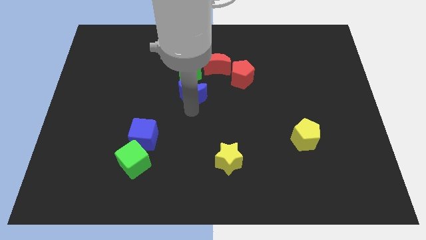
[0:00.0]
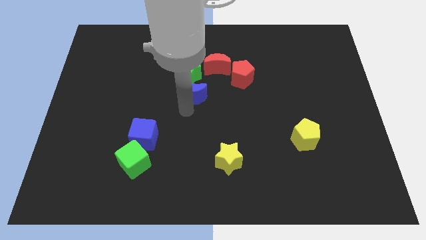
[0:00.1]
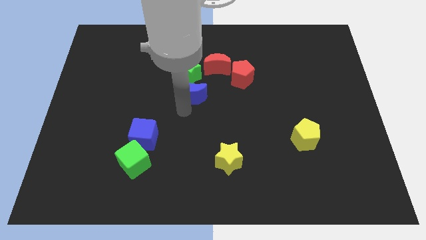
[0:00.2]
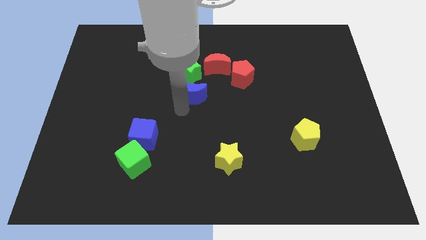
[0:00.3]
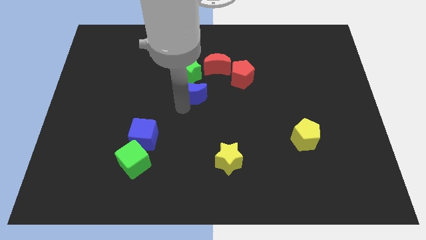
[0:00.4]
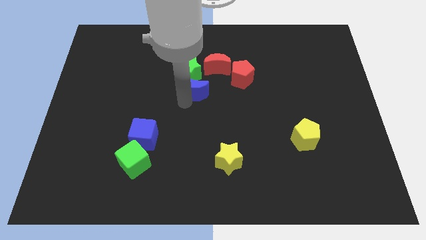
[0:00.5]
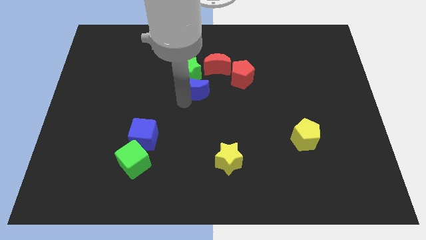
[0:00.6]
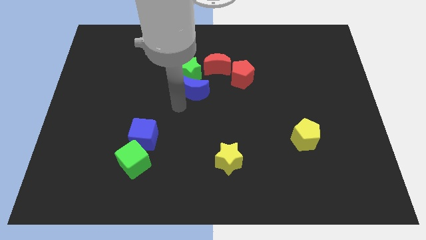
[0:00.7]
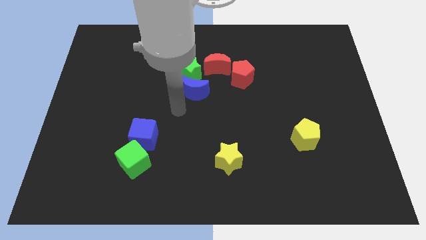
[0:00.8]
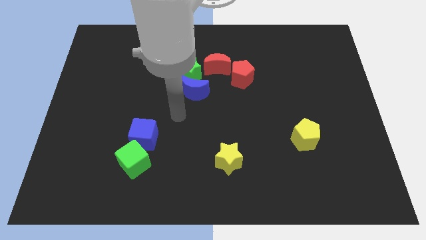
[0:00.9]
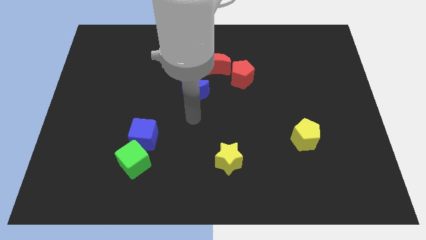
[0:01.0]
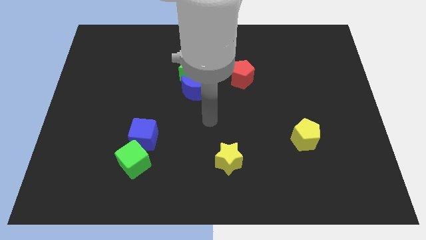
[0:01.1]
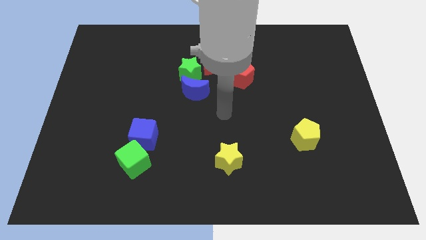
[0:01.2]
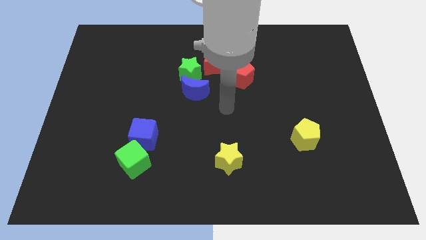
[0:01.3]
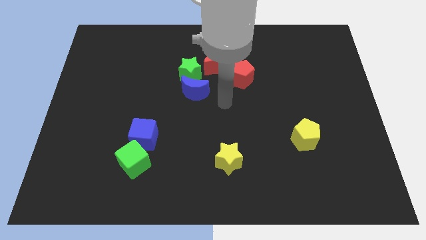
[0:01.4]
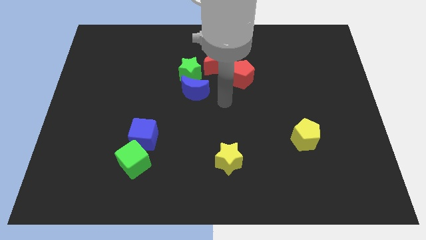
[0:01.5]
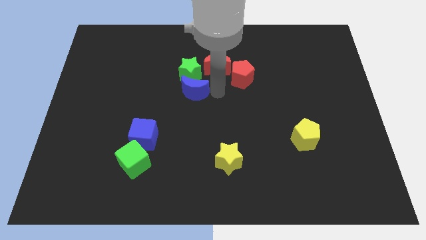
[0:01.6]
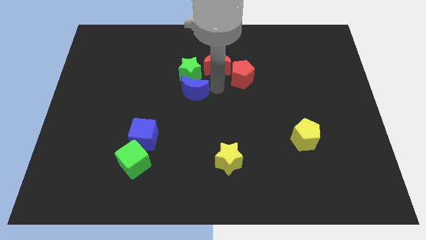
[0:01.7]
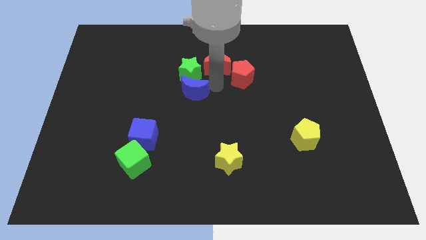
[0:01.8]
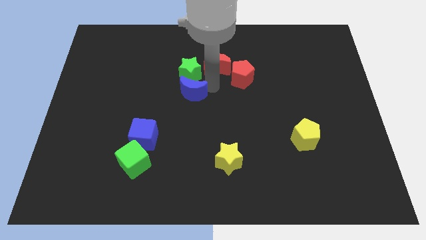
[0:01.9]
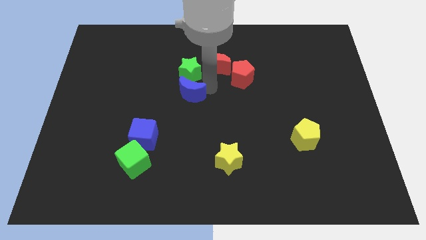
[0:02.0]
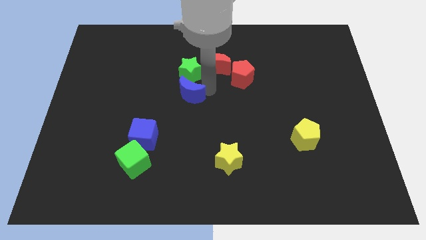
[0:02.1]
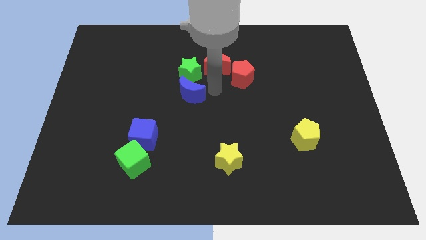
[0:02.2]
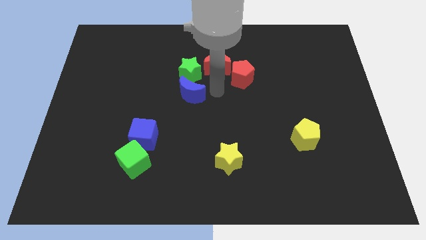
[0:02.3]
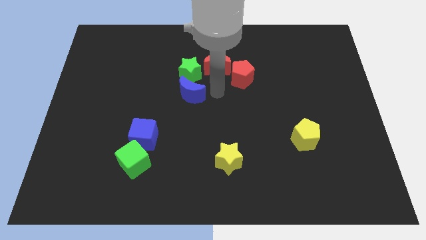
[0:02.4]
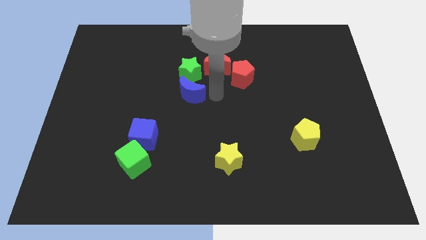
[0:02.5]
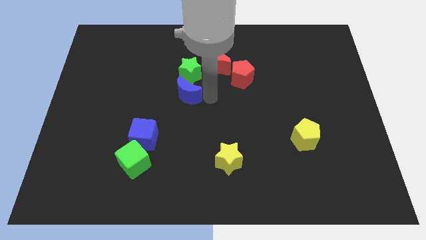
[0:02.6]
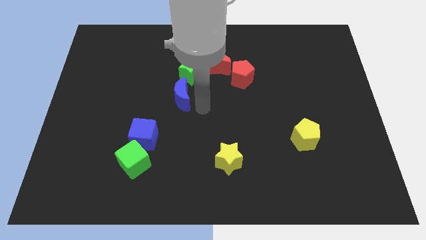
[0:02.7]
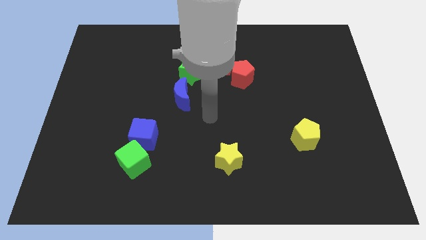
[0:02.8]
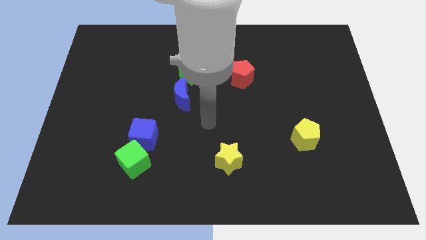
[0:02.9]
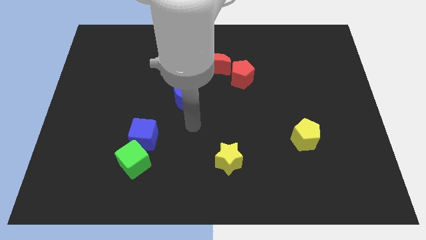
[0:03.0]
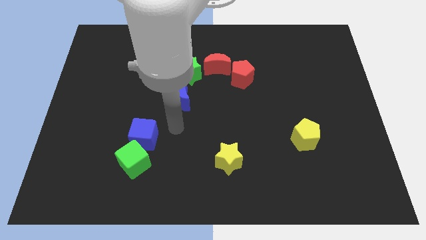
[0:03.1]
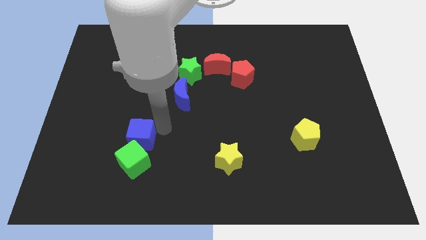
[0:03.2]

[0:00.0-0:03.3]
adjust the blue crescent below the green star

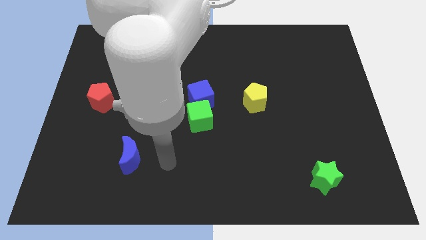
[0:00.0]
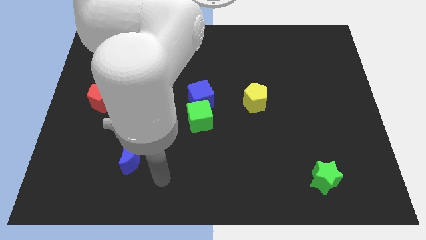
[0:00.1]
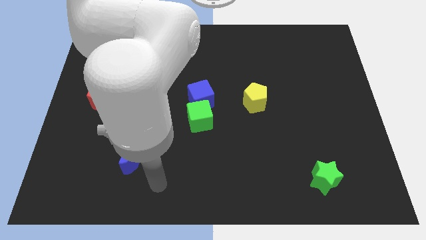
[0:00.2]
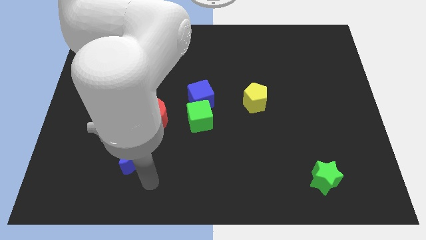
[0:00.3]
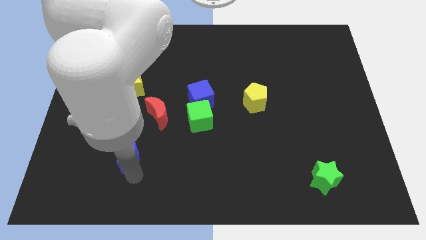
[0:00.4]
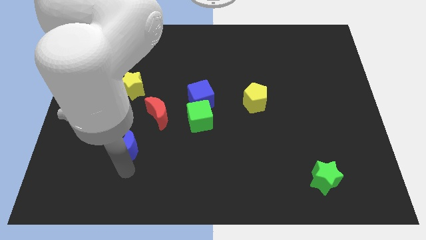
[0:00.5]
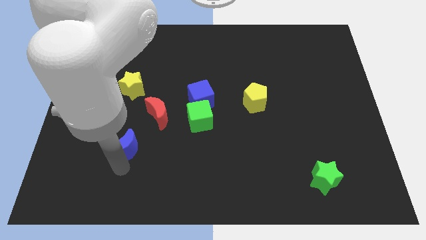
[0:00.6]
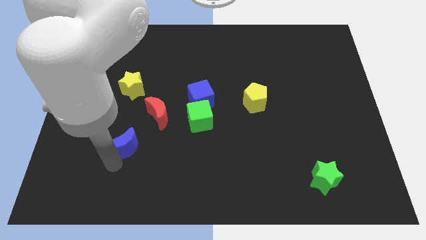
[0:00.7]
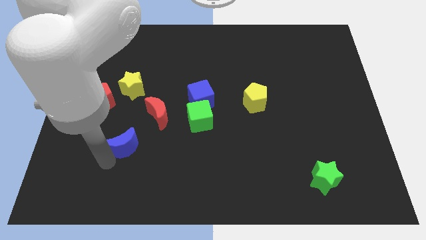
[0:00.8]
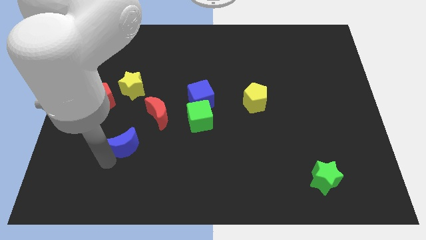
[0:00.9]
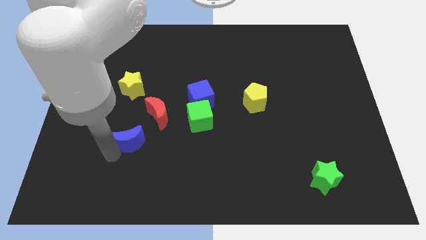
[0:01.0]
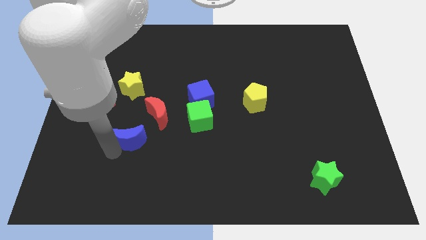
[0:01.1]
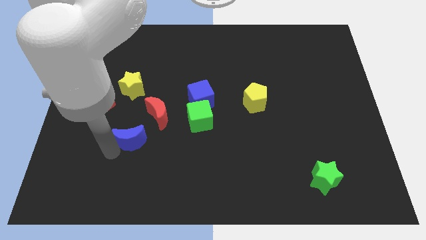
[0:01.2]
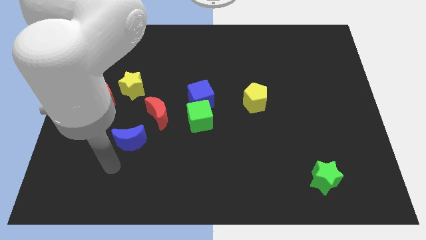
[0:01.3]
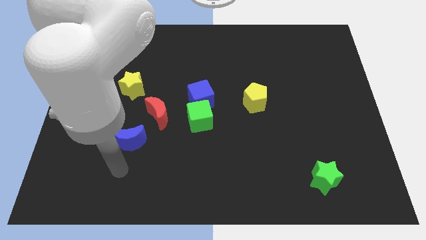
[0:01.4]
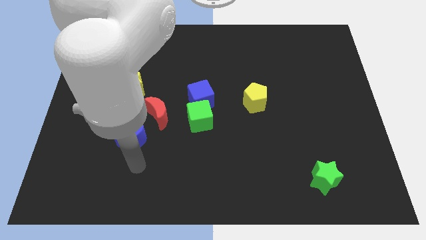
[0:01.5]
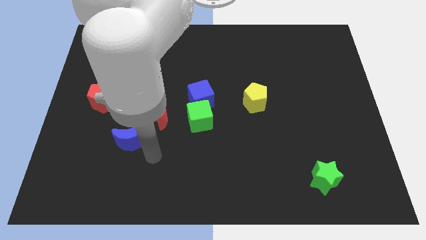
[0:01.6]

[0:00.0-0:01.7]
turn the blue moon diagonal left of green cube

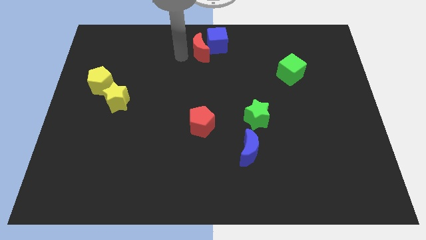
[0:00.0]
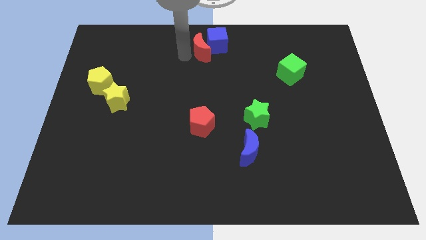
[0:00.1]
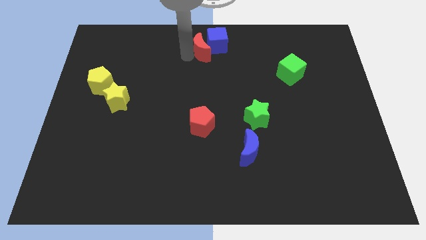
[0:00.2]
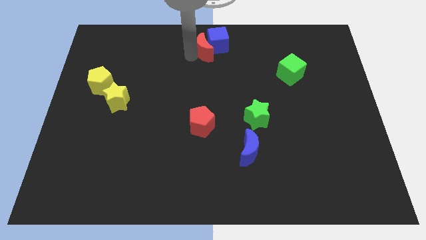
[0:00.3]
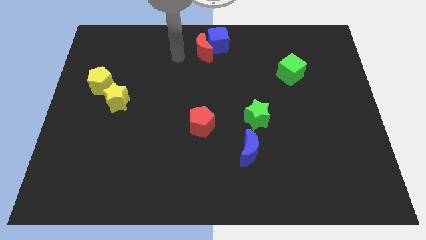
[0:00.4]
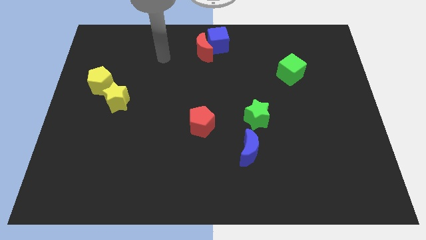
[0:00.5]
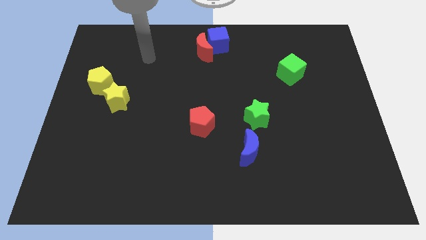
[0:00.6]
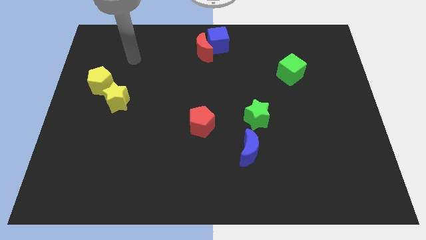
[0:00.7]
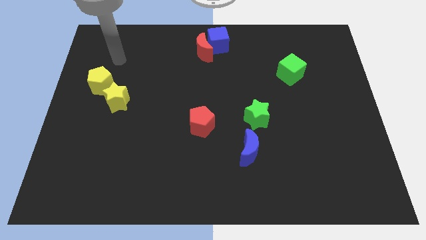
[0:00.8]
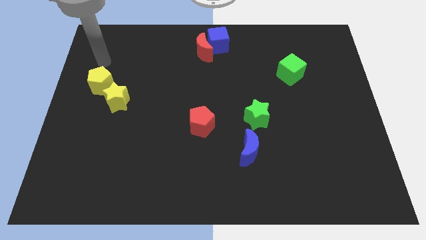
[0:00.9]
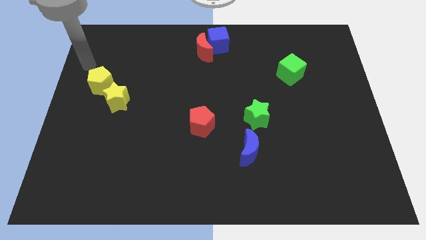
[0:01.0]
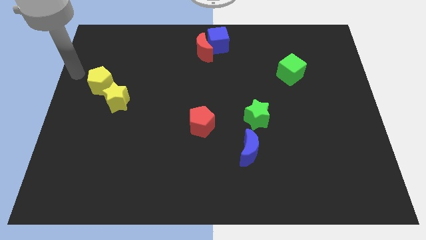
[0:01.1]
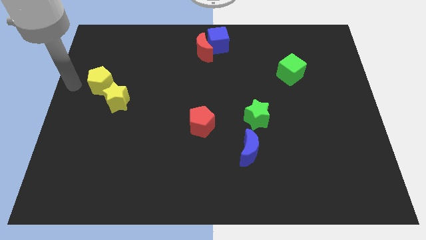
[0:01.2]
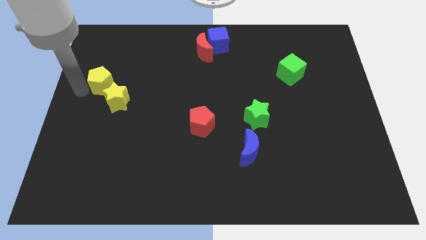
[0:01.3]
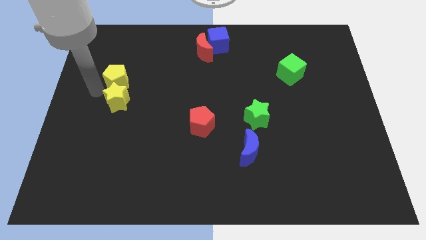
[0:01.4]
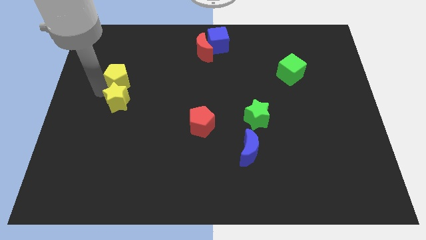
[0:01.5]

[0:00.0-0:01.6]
move your arm towards the yellow pentagon

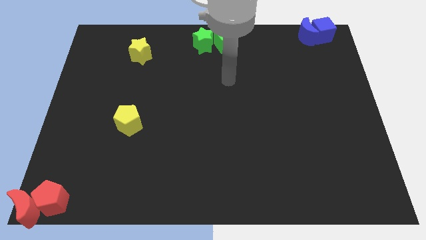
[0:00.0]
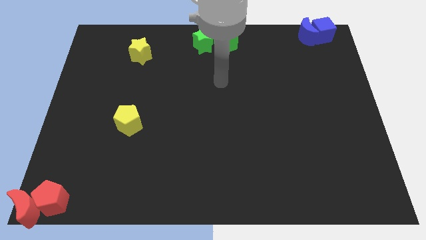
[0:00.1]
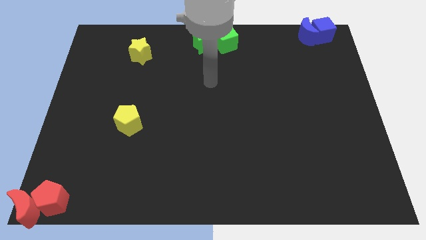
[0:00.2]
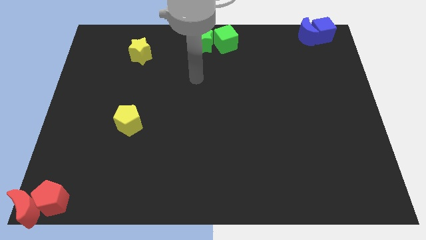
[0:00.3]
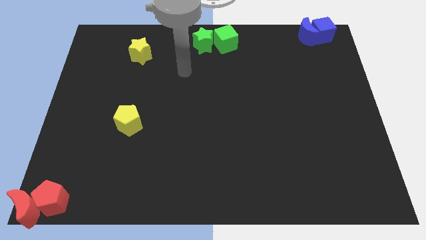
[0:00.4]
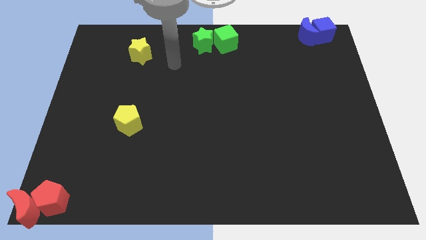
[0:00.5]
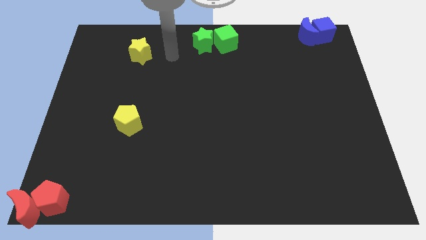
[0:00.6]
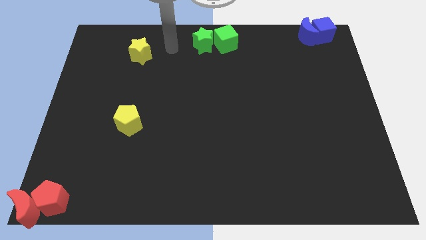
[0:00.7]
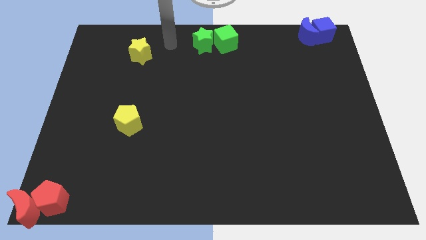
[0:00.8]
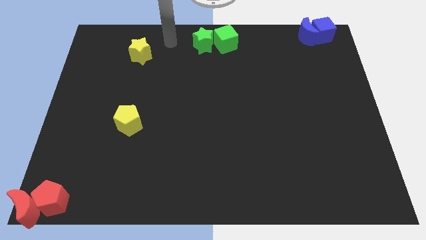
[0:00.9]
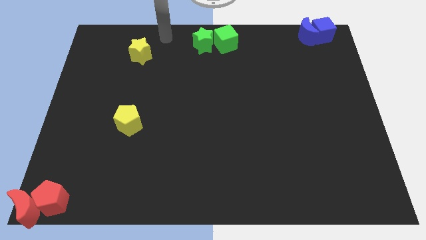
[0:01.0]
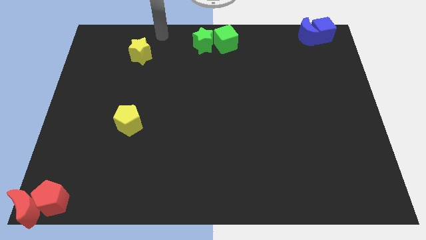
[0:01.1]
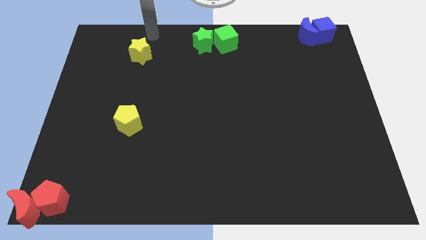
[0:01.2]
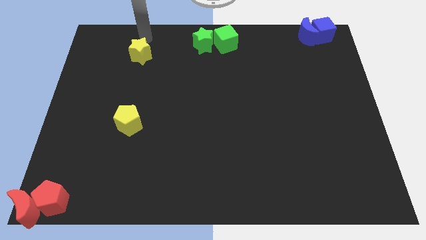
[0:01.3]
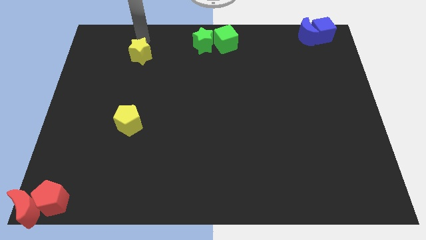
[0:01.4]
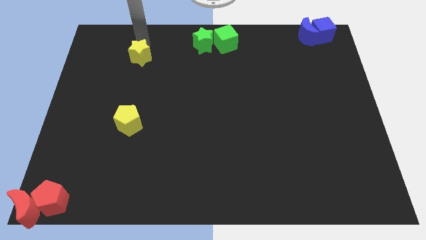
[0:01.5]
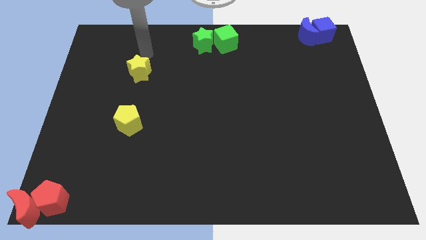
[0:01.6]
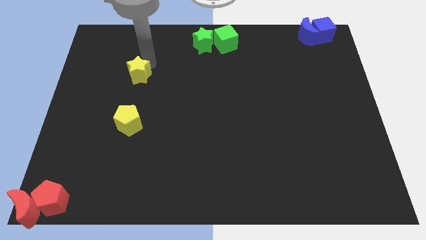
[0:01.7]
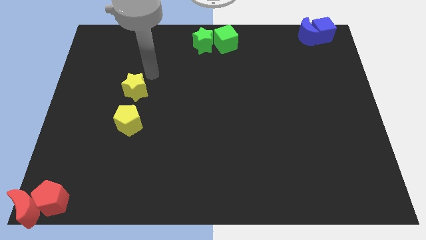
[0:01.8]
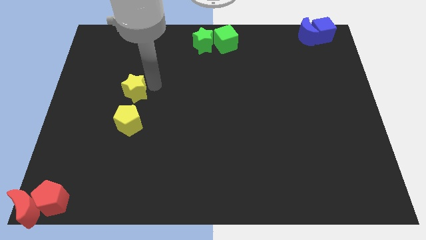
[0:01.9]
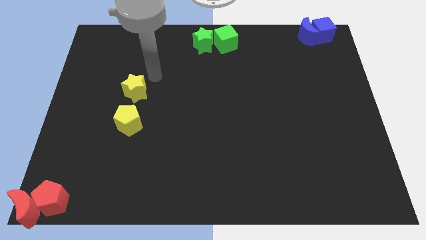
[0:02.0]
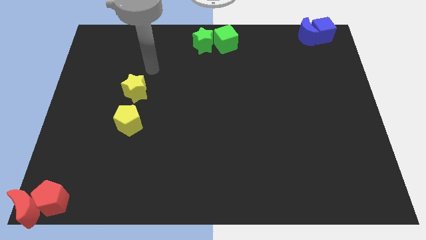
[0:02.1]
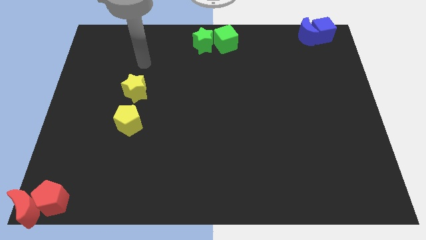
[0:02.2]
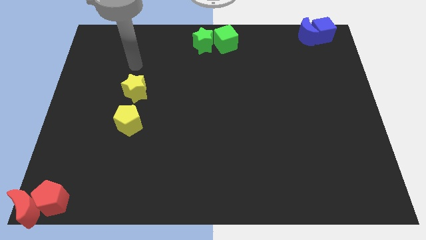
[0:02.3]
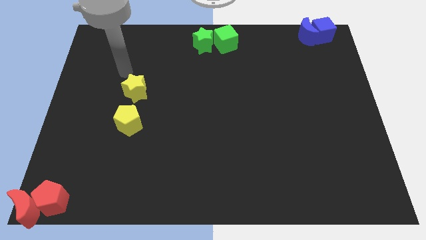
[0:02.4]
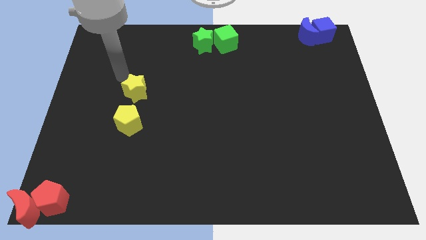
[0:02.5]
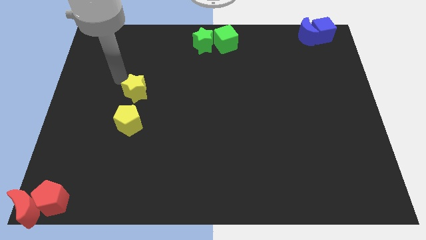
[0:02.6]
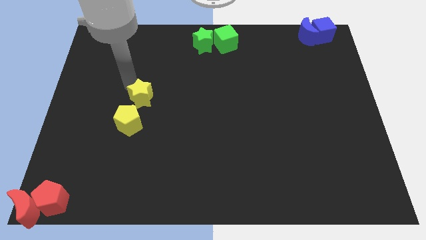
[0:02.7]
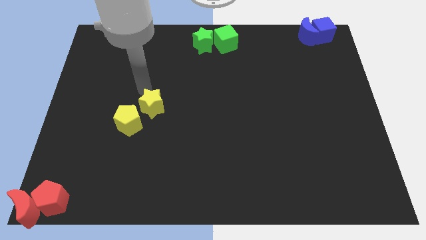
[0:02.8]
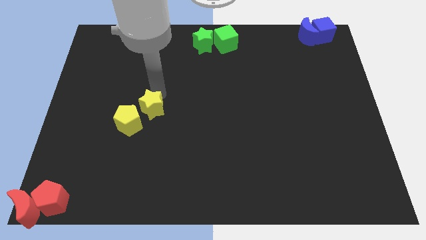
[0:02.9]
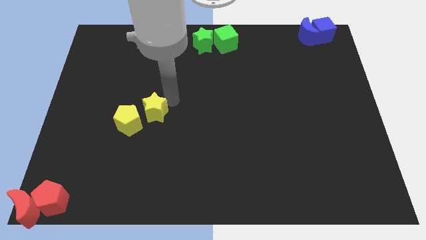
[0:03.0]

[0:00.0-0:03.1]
slightly push the yellow star towards the bottom on the board
